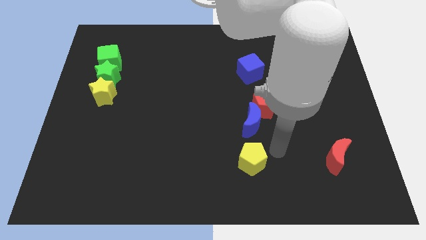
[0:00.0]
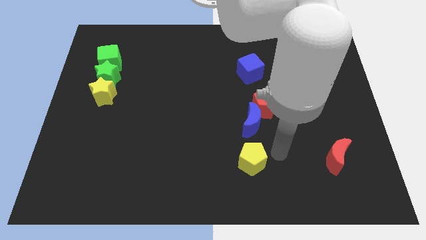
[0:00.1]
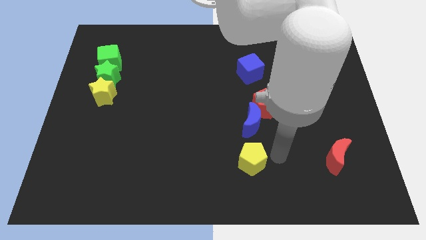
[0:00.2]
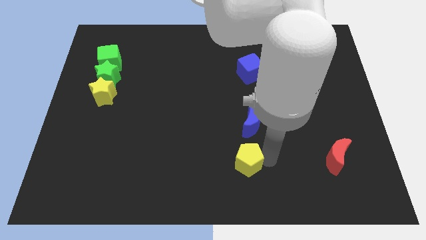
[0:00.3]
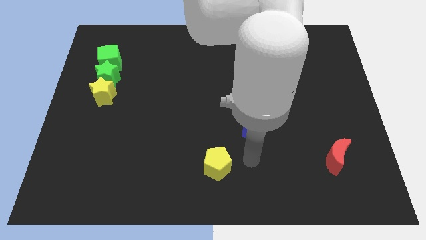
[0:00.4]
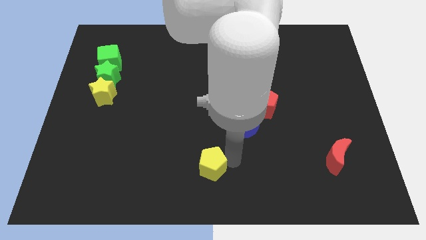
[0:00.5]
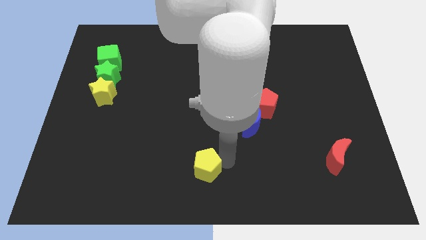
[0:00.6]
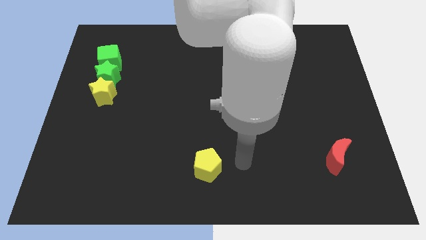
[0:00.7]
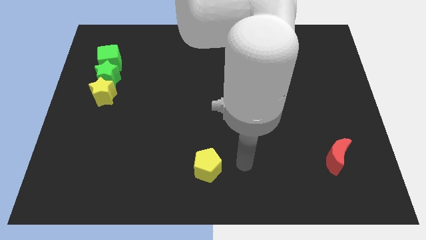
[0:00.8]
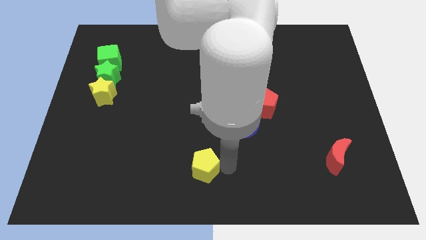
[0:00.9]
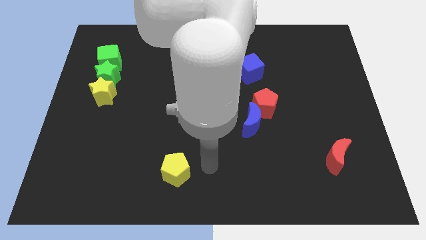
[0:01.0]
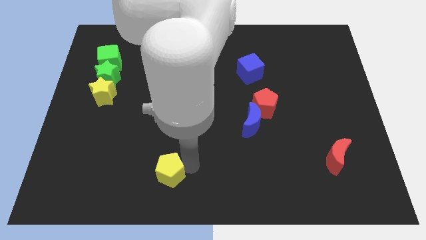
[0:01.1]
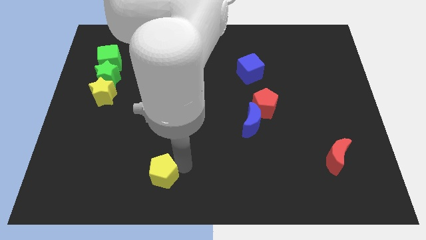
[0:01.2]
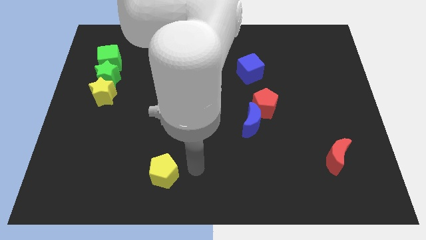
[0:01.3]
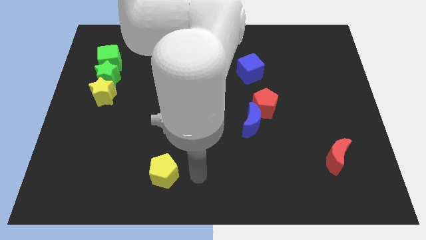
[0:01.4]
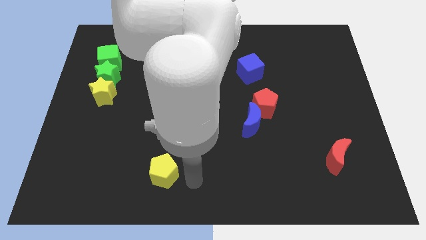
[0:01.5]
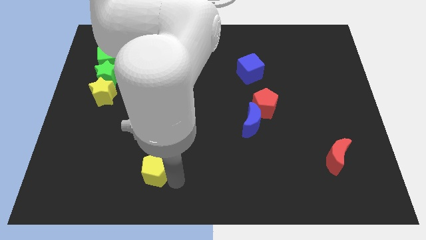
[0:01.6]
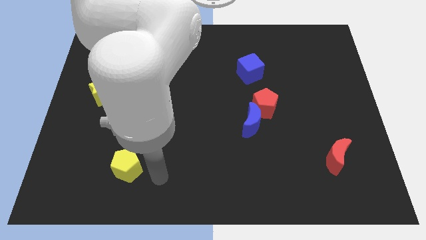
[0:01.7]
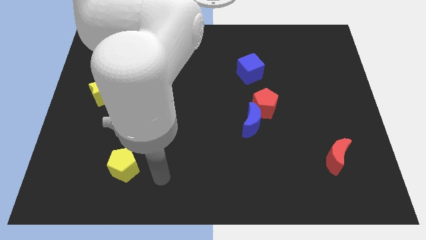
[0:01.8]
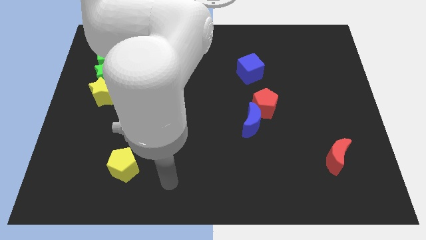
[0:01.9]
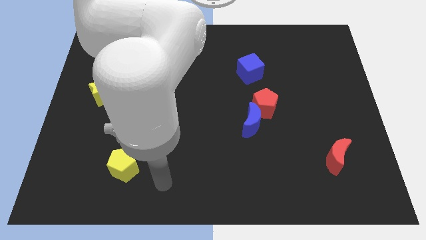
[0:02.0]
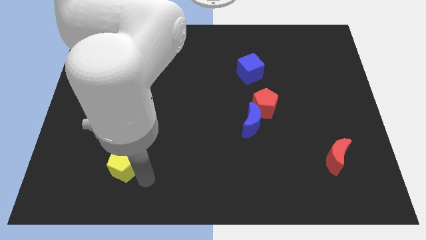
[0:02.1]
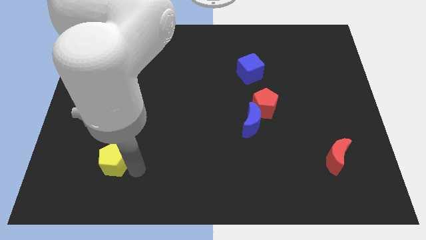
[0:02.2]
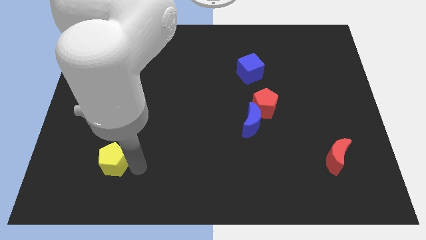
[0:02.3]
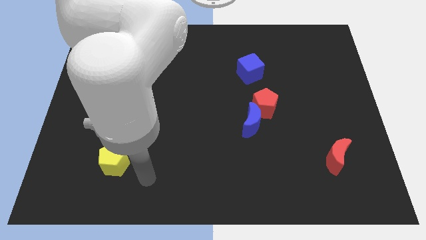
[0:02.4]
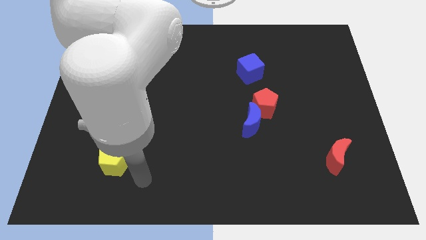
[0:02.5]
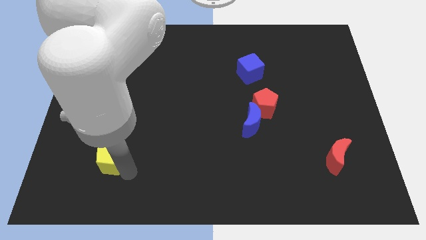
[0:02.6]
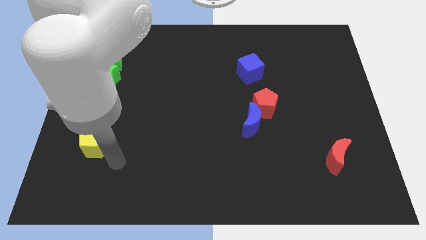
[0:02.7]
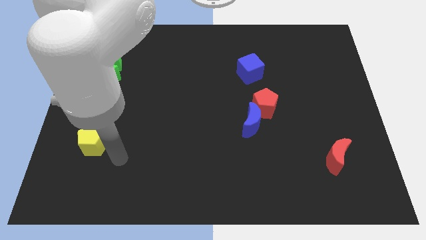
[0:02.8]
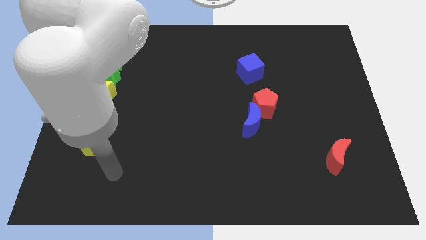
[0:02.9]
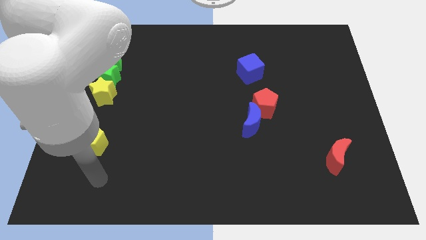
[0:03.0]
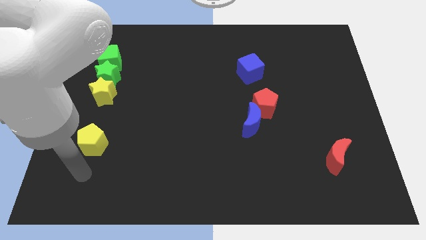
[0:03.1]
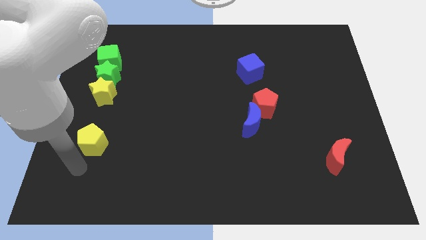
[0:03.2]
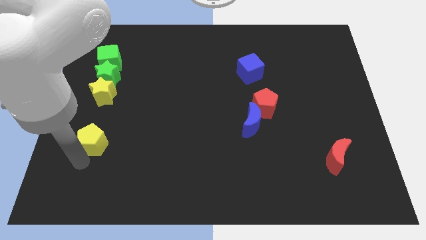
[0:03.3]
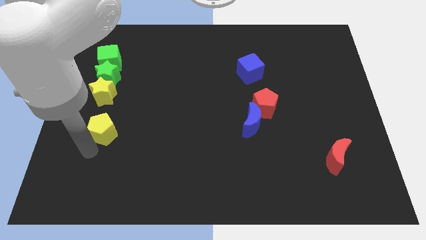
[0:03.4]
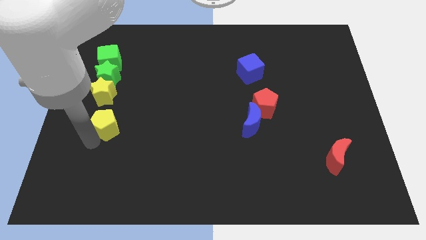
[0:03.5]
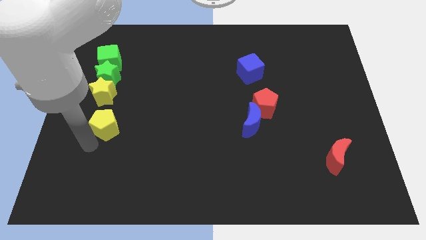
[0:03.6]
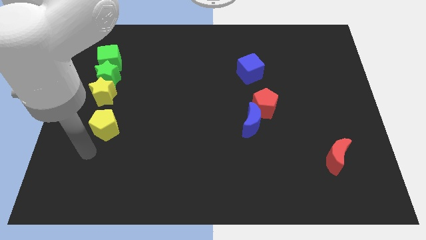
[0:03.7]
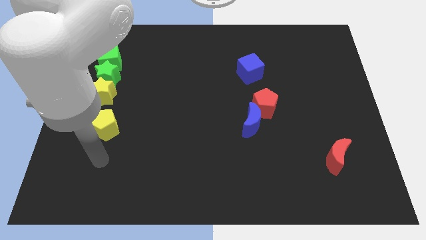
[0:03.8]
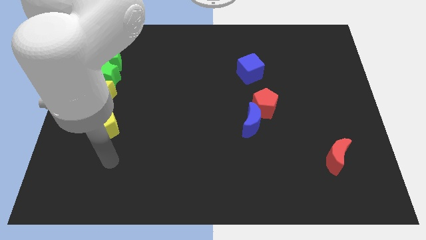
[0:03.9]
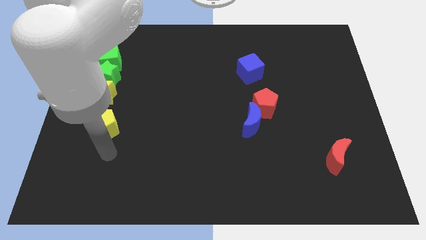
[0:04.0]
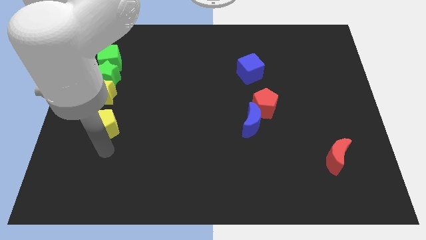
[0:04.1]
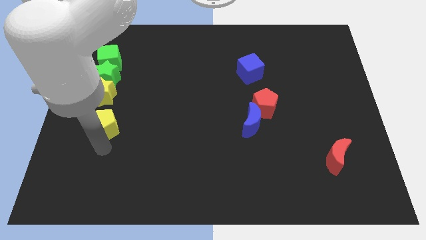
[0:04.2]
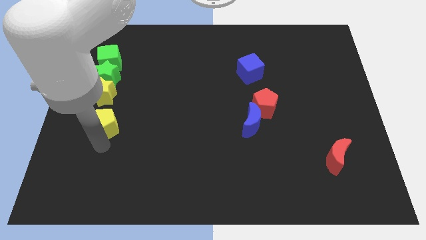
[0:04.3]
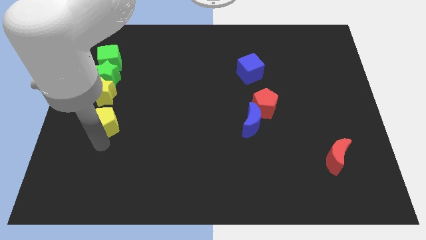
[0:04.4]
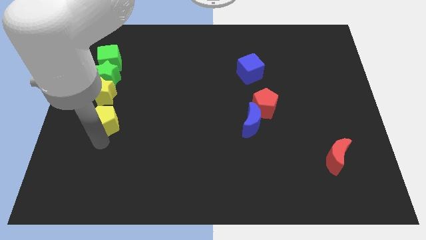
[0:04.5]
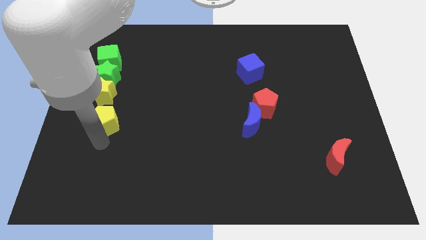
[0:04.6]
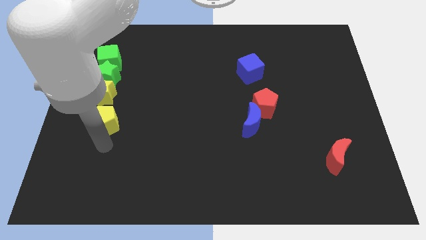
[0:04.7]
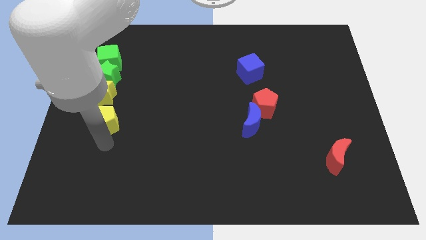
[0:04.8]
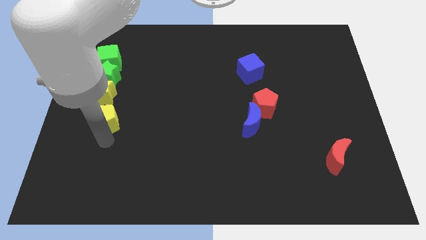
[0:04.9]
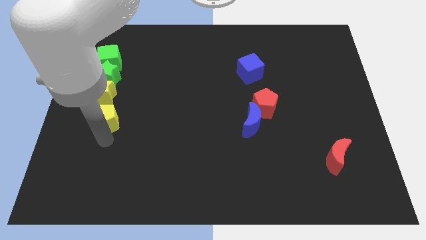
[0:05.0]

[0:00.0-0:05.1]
move yellow pentagon to form a vertical line with other blocks

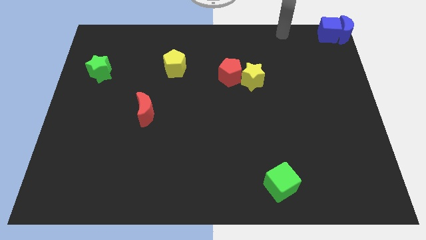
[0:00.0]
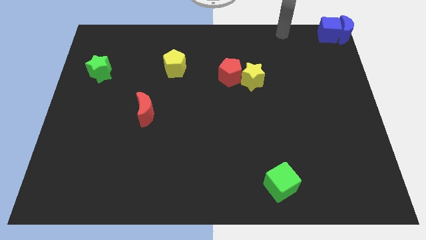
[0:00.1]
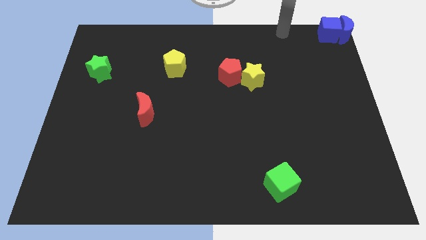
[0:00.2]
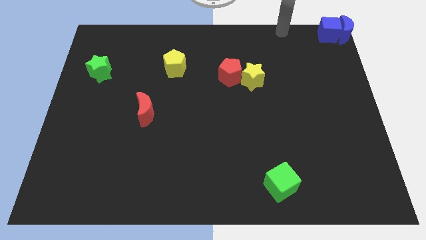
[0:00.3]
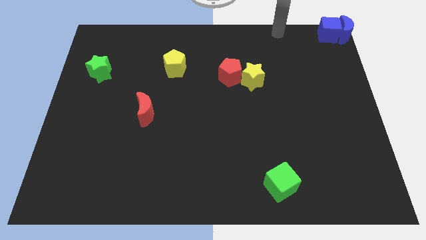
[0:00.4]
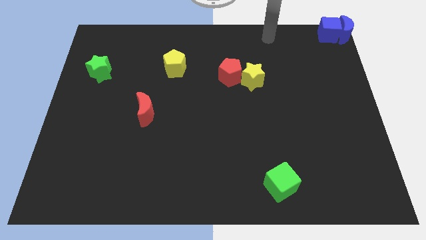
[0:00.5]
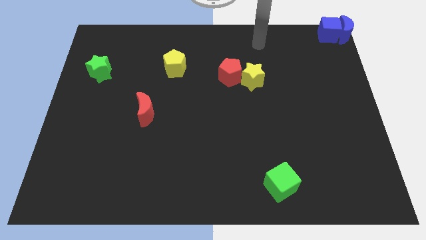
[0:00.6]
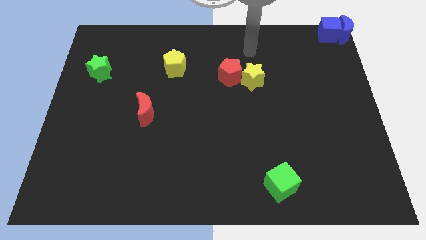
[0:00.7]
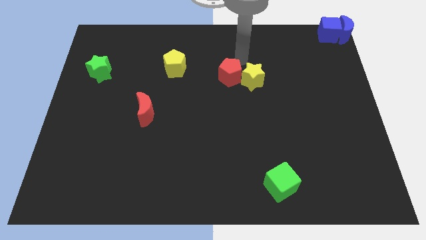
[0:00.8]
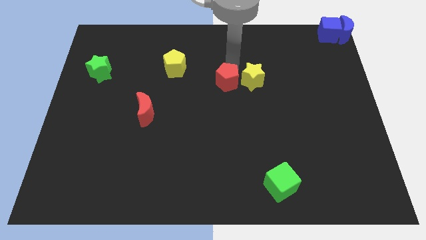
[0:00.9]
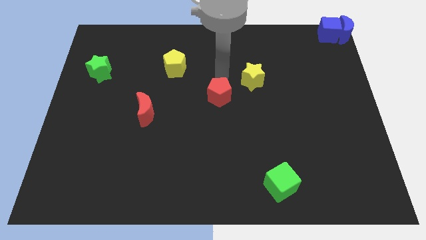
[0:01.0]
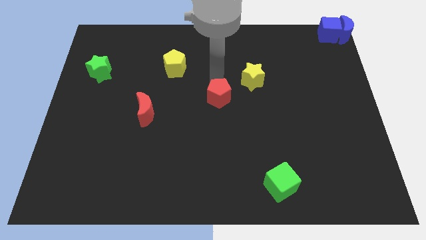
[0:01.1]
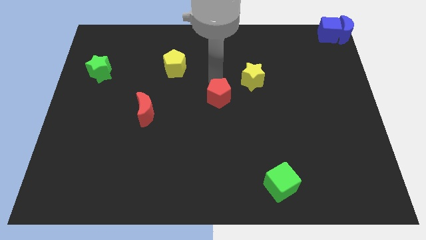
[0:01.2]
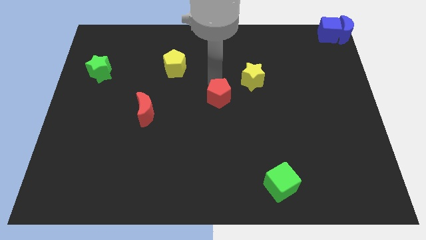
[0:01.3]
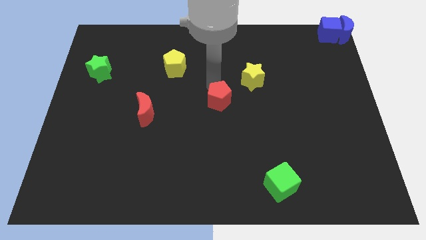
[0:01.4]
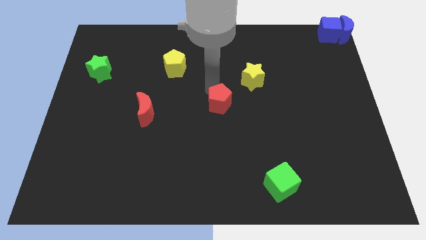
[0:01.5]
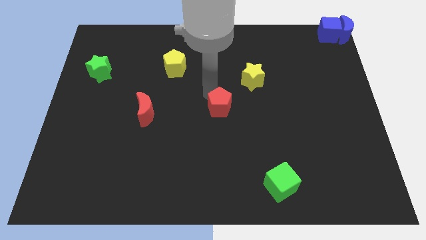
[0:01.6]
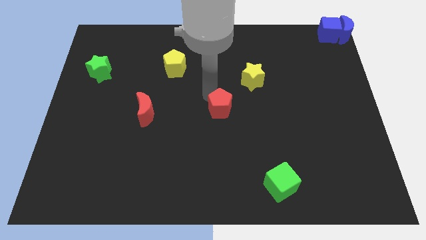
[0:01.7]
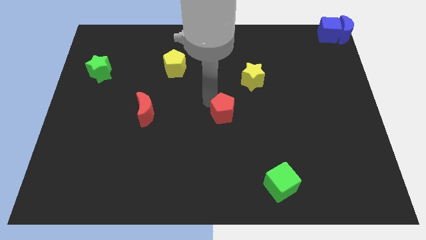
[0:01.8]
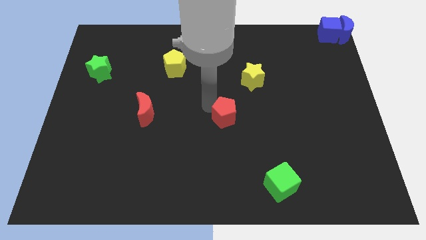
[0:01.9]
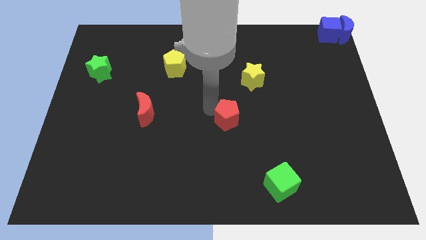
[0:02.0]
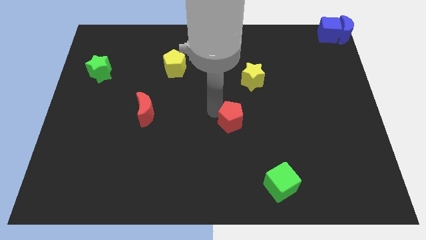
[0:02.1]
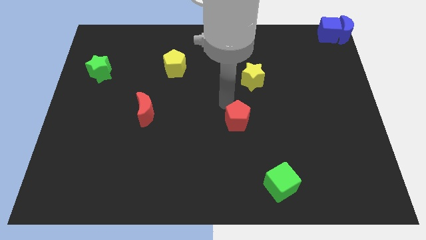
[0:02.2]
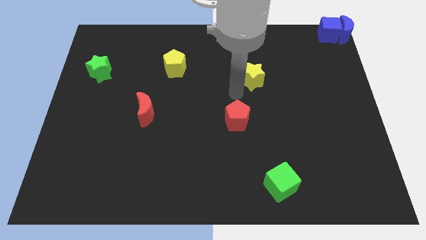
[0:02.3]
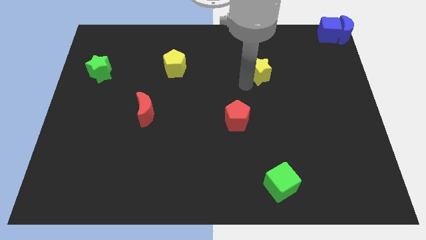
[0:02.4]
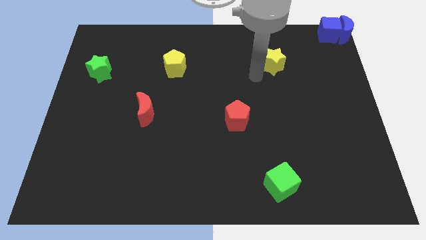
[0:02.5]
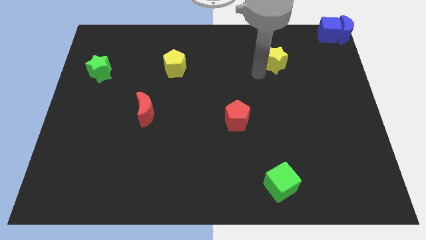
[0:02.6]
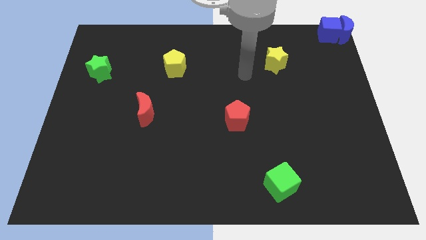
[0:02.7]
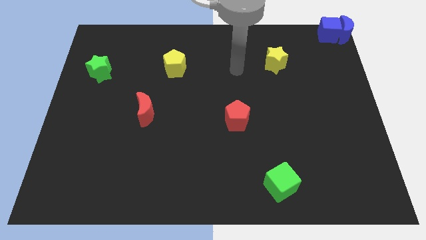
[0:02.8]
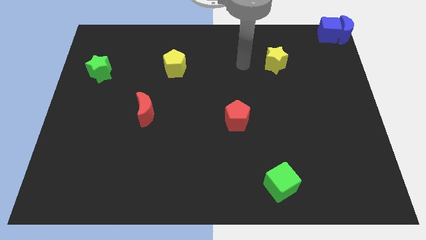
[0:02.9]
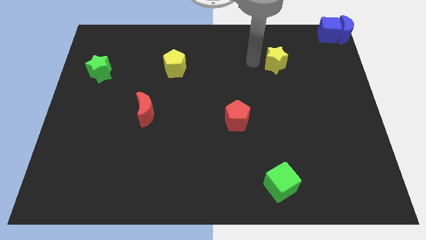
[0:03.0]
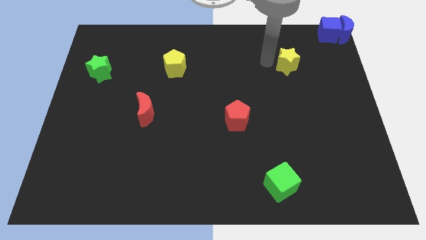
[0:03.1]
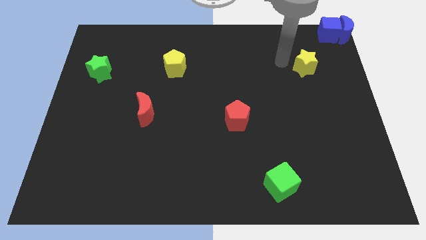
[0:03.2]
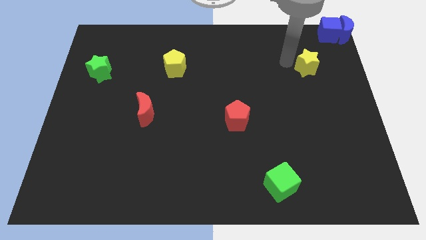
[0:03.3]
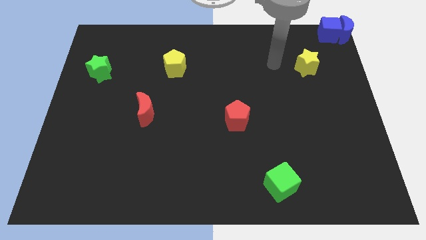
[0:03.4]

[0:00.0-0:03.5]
separate red pentagon from the yellow star

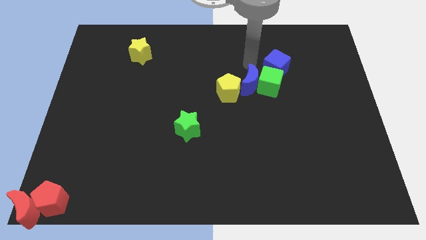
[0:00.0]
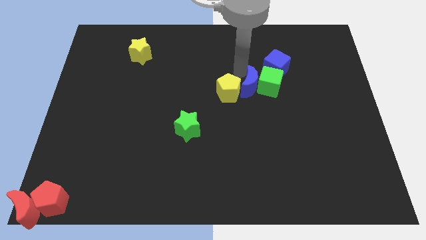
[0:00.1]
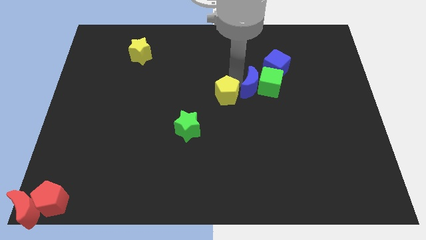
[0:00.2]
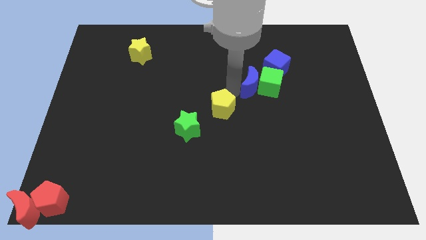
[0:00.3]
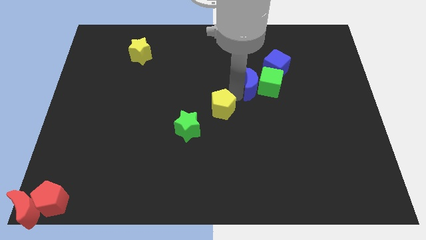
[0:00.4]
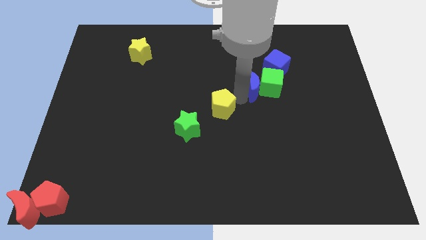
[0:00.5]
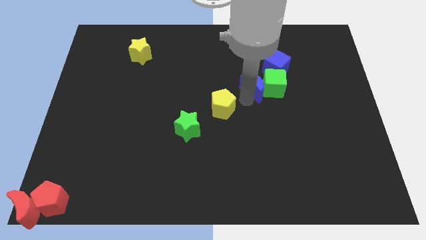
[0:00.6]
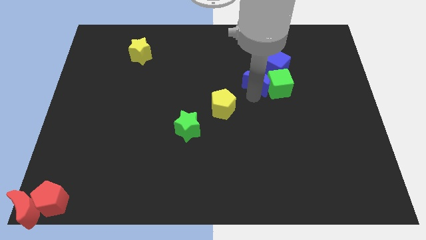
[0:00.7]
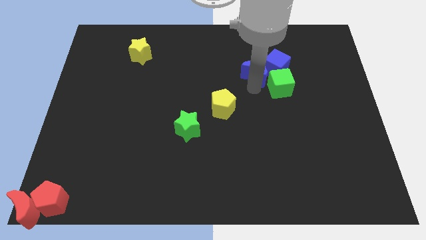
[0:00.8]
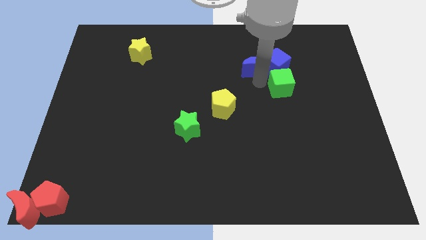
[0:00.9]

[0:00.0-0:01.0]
separate the yellow pentagon from the blue moon
